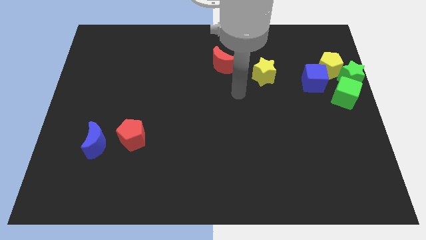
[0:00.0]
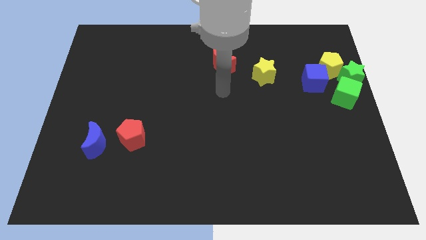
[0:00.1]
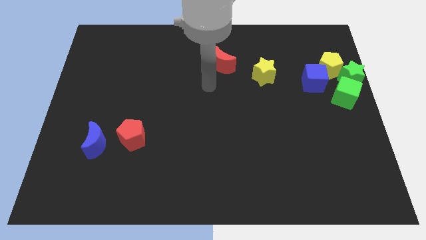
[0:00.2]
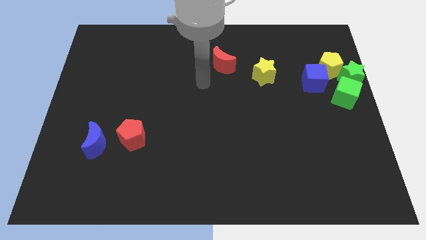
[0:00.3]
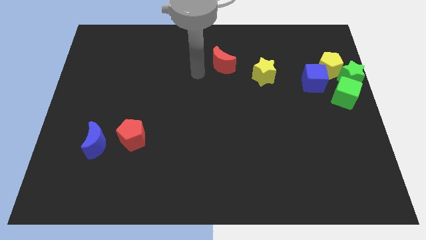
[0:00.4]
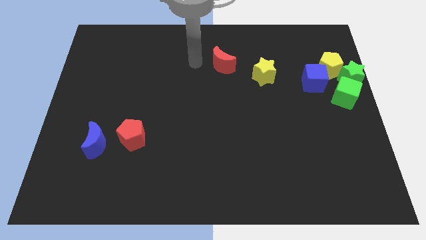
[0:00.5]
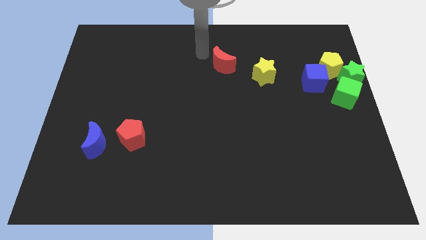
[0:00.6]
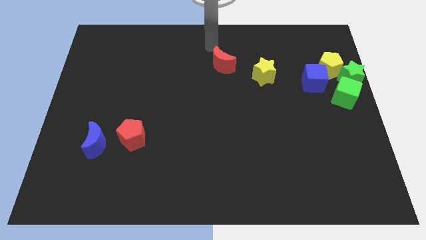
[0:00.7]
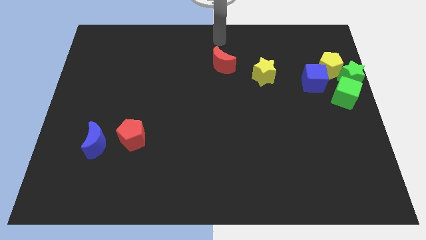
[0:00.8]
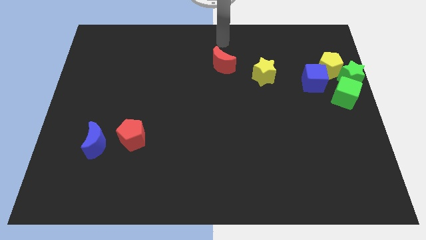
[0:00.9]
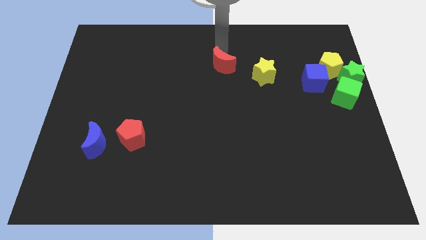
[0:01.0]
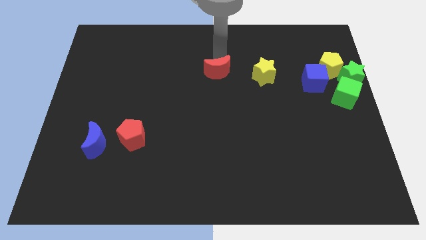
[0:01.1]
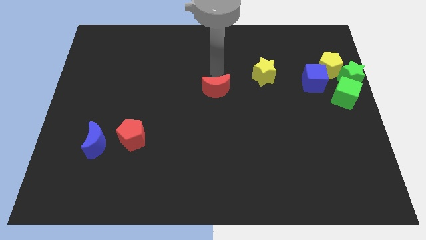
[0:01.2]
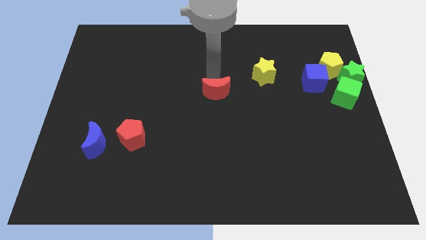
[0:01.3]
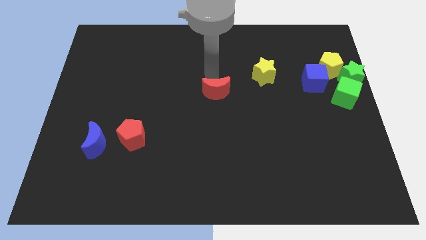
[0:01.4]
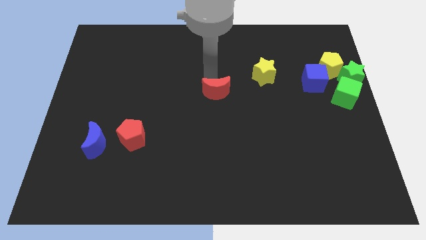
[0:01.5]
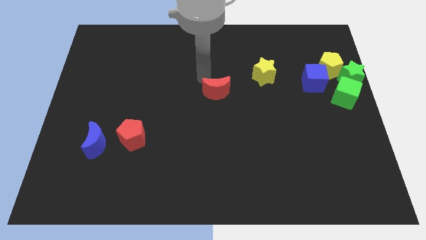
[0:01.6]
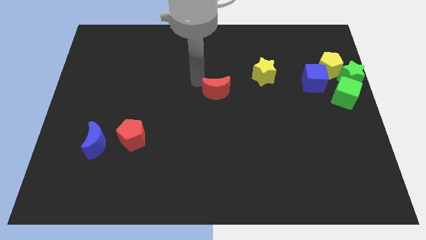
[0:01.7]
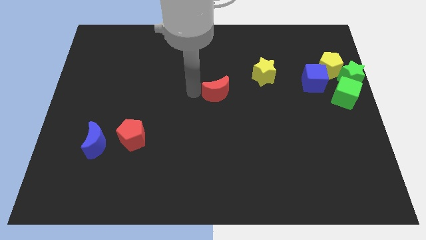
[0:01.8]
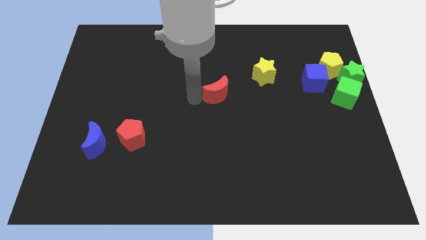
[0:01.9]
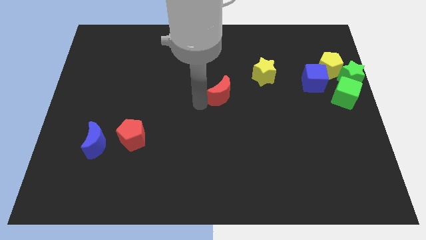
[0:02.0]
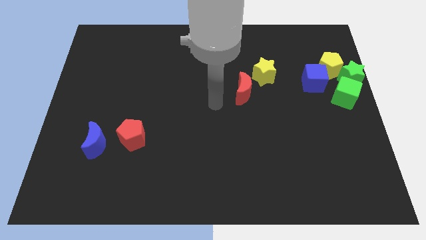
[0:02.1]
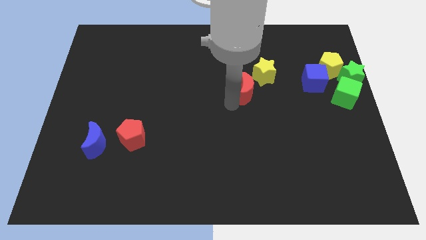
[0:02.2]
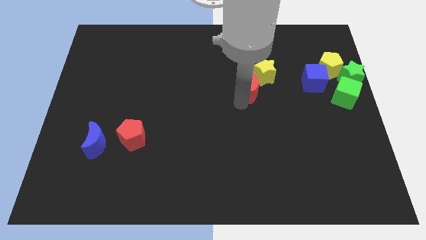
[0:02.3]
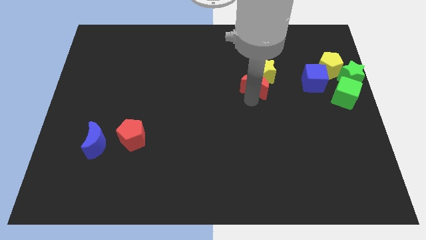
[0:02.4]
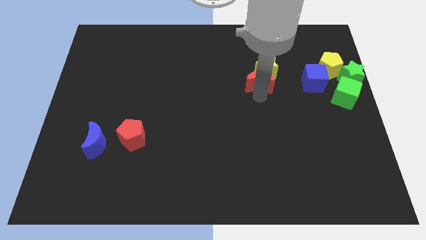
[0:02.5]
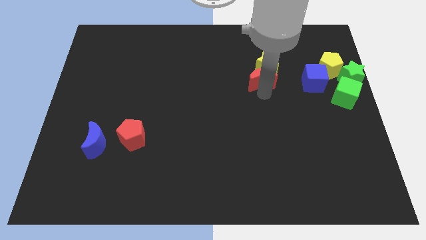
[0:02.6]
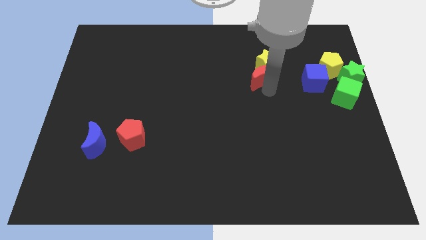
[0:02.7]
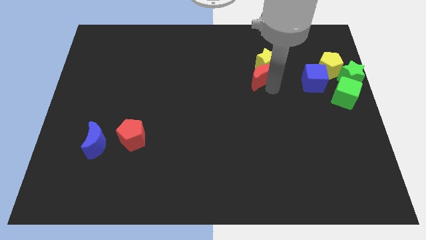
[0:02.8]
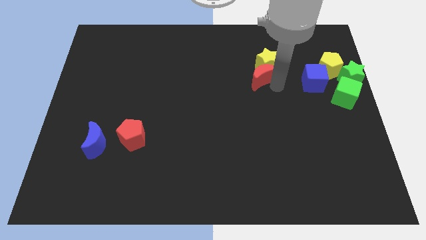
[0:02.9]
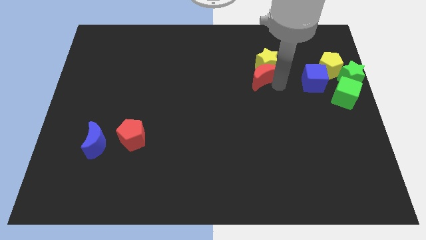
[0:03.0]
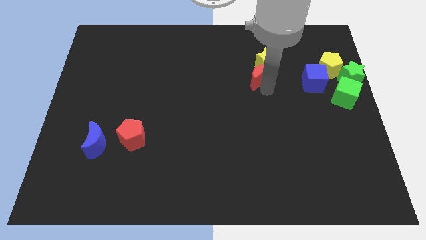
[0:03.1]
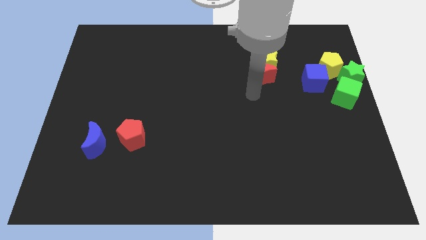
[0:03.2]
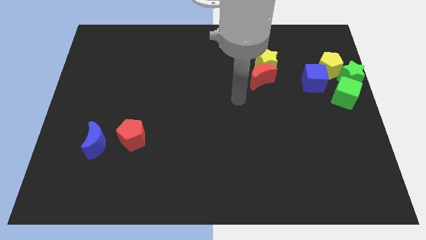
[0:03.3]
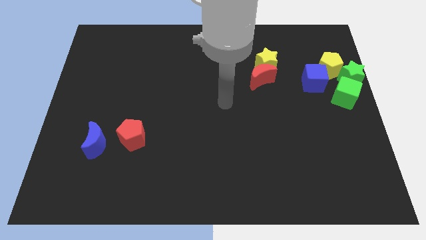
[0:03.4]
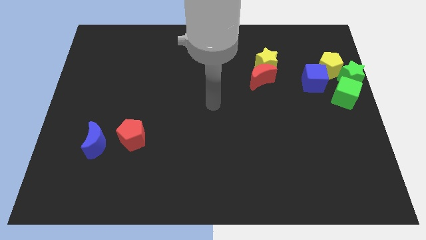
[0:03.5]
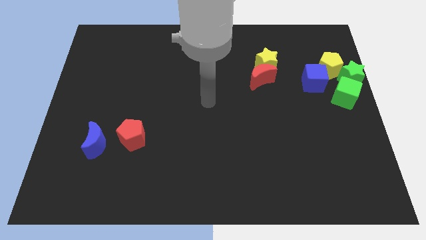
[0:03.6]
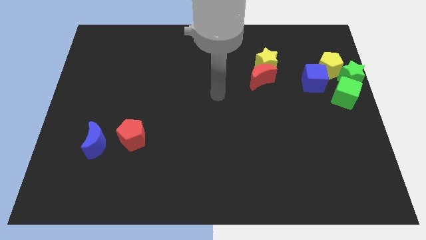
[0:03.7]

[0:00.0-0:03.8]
push the red moon into yellow star

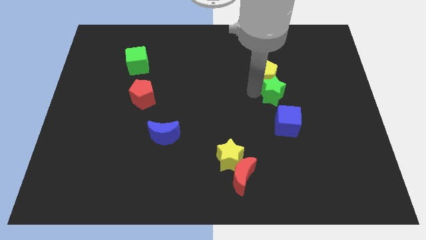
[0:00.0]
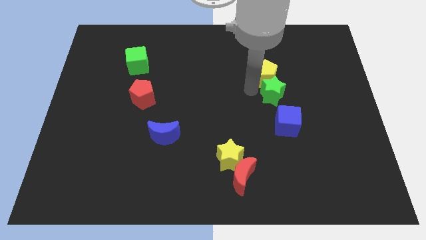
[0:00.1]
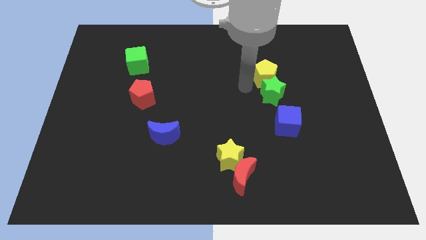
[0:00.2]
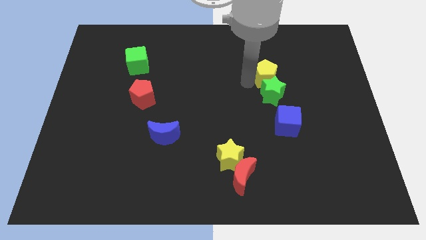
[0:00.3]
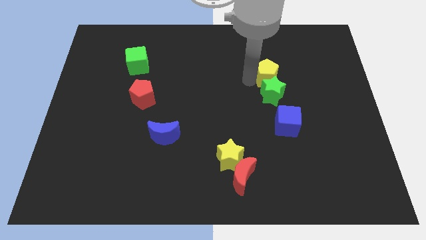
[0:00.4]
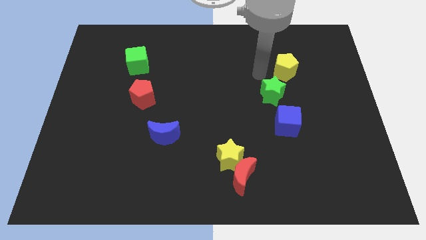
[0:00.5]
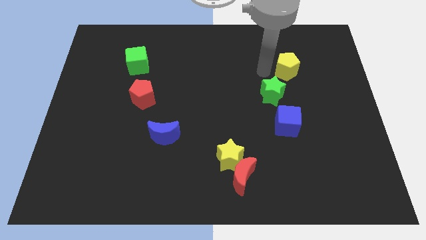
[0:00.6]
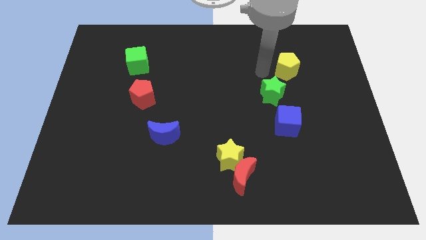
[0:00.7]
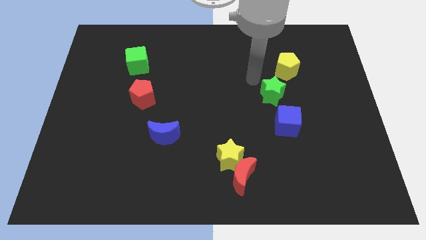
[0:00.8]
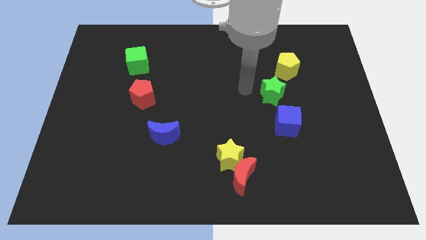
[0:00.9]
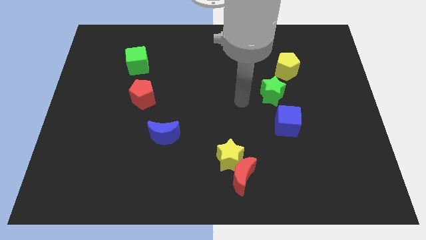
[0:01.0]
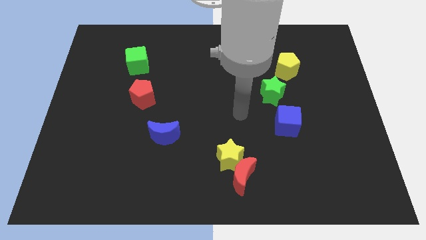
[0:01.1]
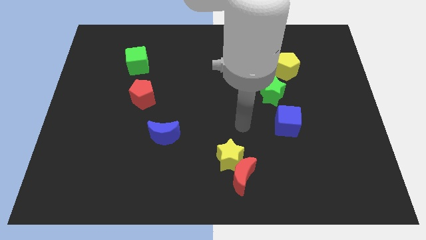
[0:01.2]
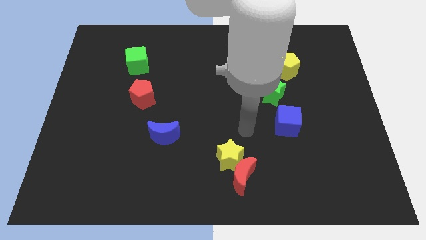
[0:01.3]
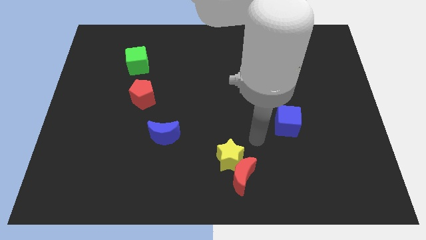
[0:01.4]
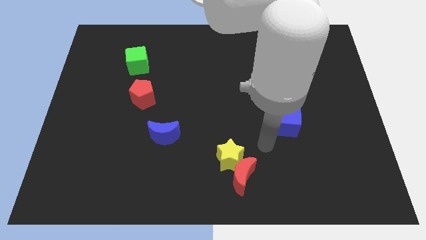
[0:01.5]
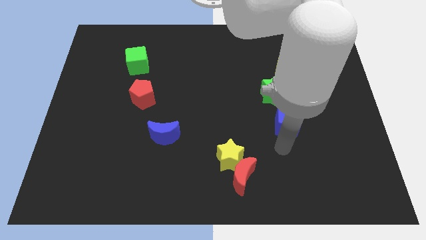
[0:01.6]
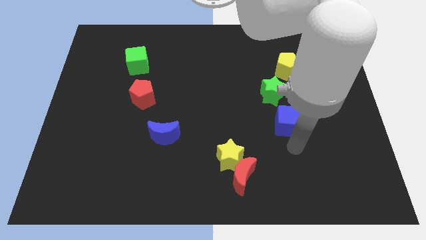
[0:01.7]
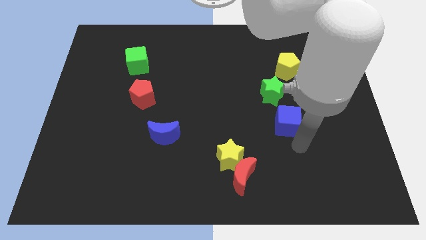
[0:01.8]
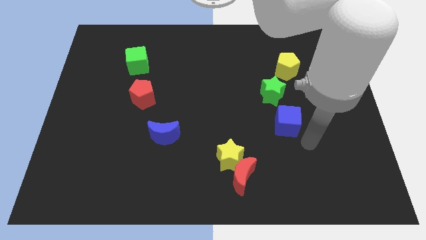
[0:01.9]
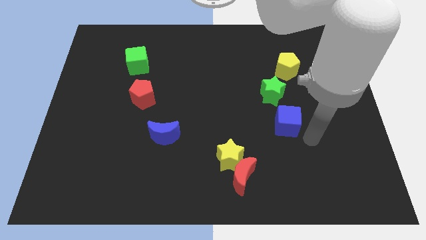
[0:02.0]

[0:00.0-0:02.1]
separate the yellow pentagon from the green star

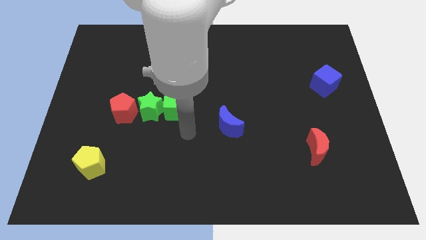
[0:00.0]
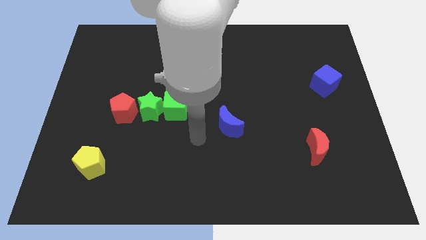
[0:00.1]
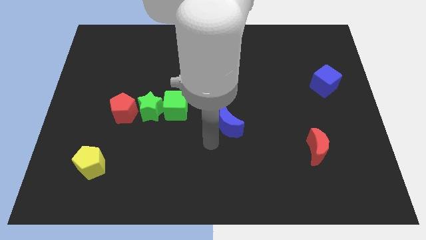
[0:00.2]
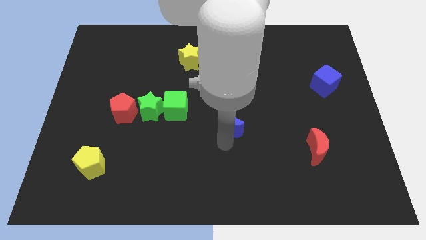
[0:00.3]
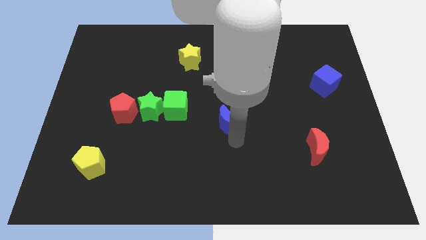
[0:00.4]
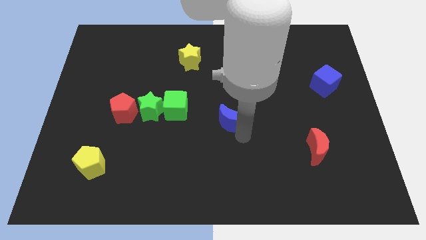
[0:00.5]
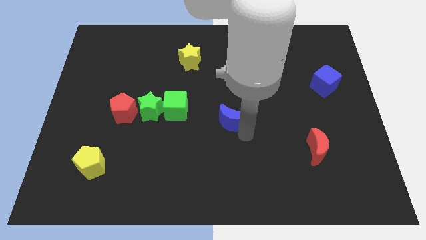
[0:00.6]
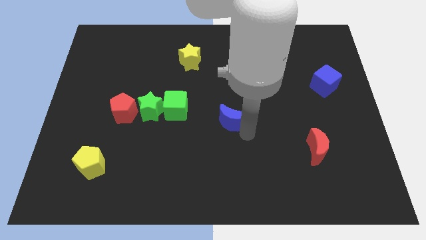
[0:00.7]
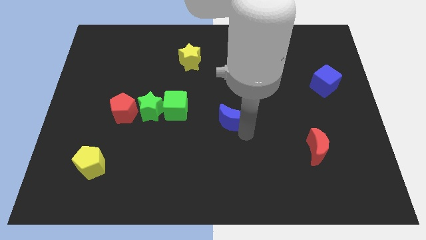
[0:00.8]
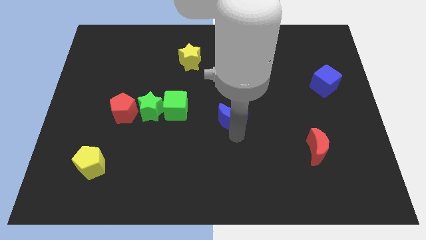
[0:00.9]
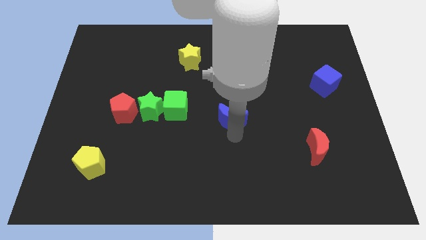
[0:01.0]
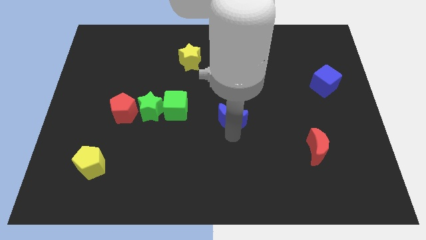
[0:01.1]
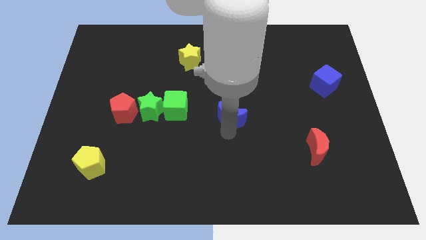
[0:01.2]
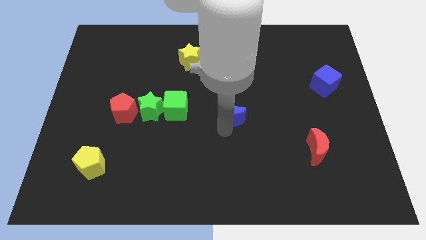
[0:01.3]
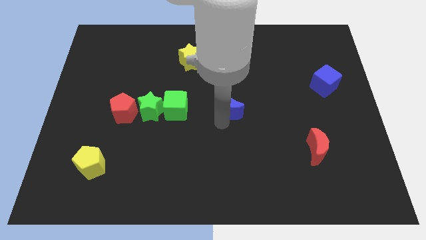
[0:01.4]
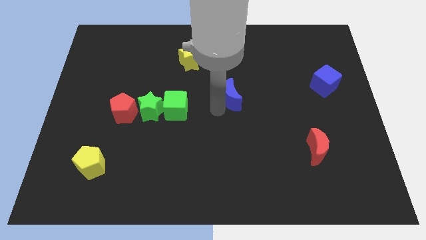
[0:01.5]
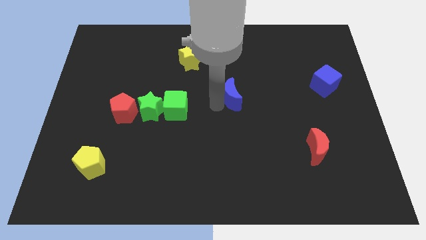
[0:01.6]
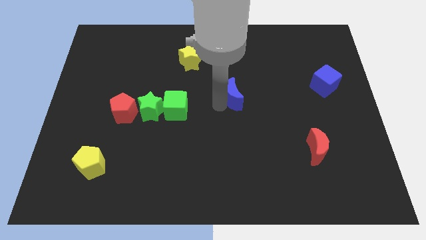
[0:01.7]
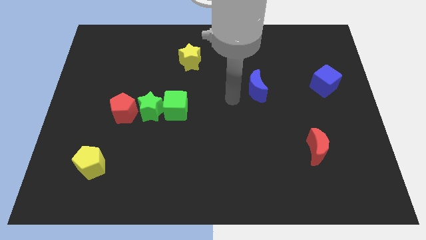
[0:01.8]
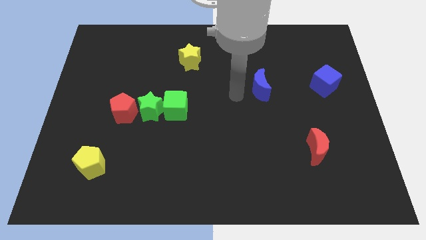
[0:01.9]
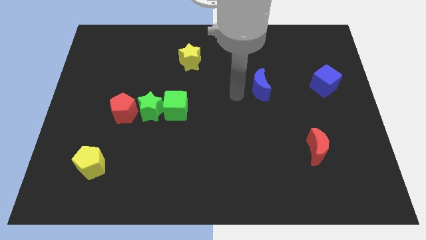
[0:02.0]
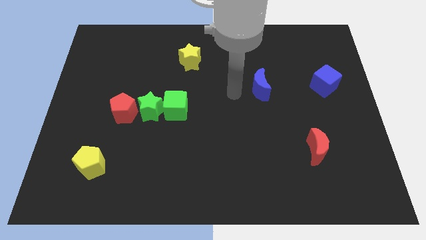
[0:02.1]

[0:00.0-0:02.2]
move the blue crescent parallel to the blue cube

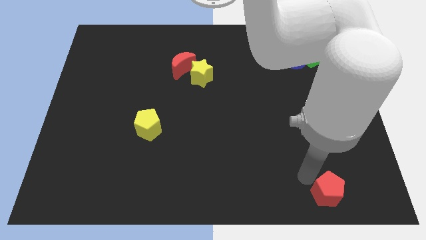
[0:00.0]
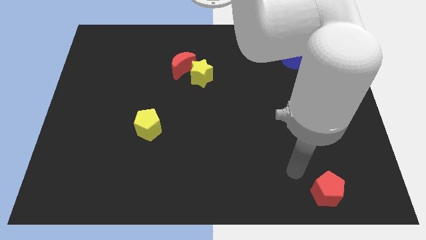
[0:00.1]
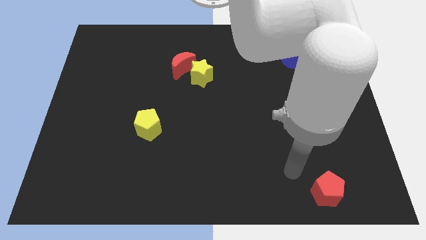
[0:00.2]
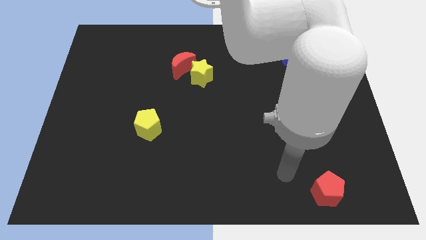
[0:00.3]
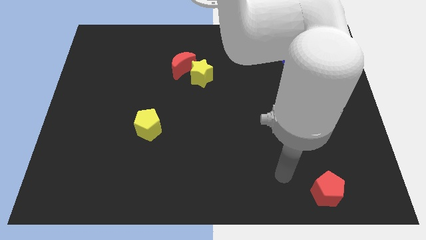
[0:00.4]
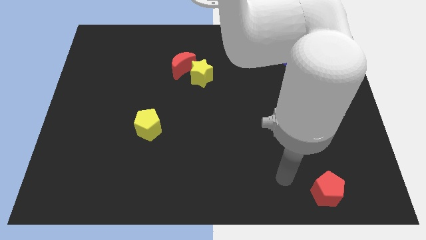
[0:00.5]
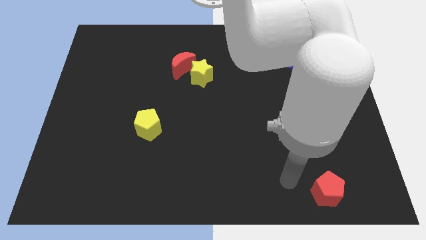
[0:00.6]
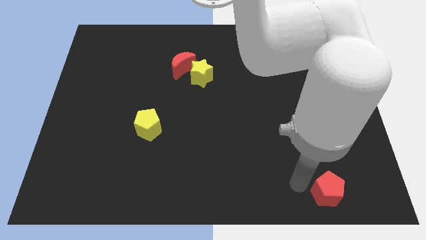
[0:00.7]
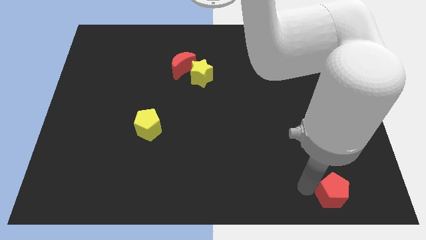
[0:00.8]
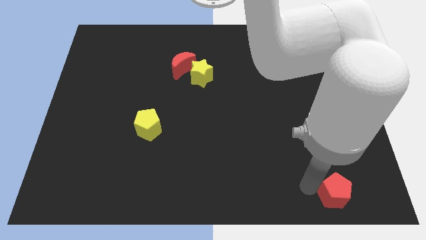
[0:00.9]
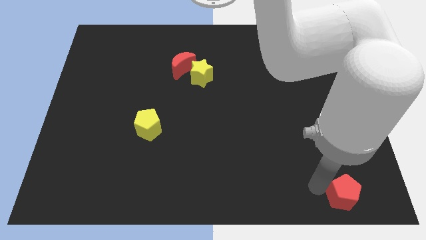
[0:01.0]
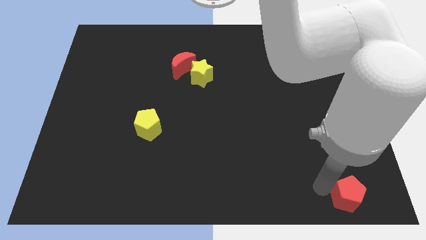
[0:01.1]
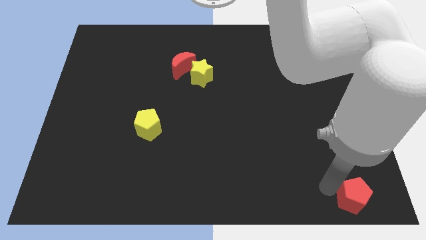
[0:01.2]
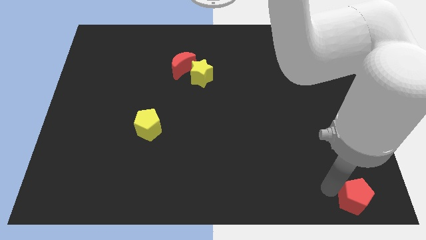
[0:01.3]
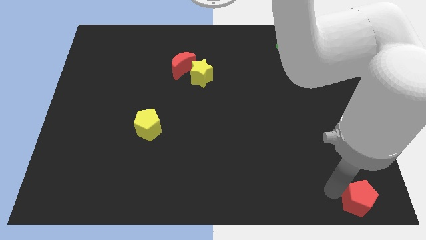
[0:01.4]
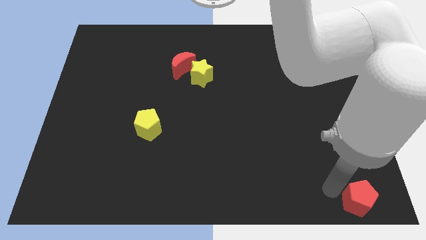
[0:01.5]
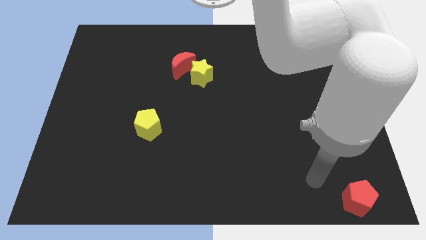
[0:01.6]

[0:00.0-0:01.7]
move the red pentagon to the bottom right side of the board
